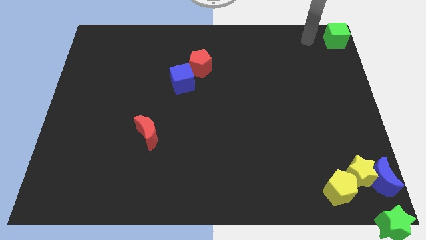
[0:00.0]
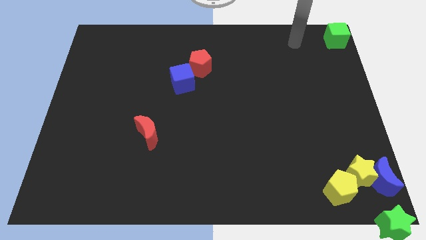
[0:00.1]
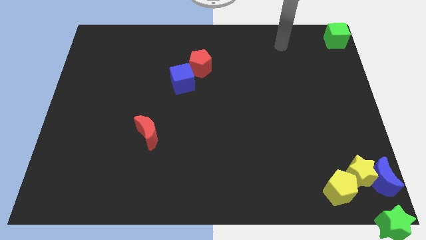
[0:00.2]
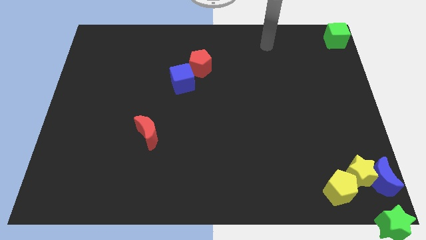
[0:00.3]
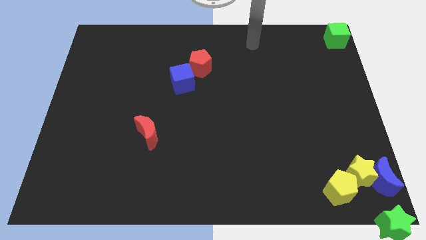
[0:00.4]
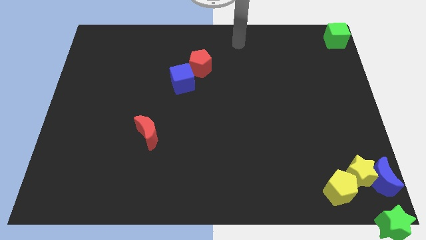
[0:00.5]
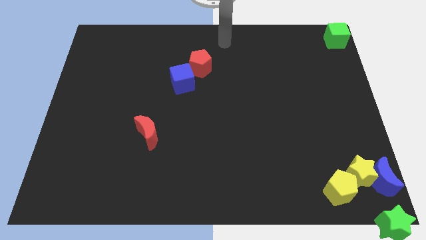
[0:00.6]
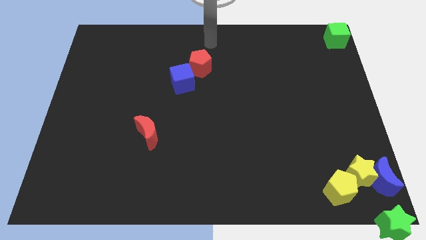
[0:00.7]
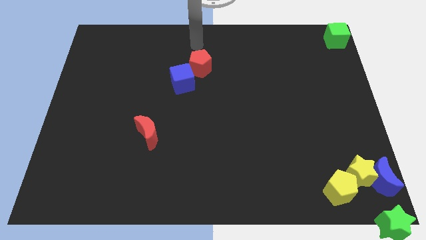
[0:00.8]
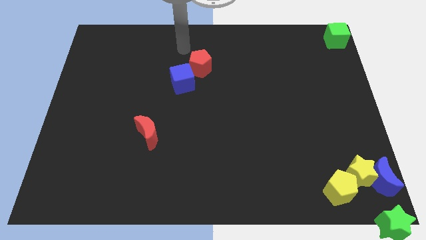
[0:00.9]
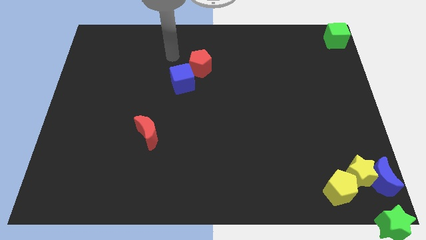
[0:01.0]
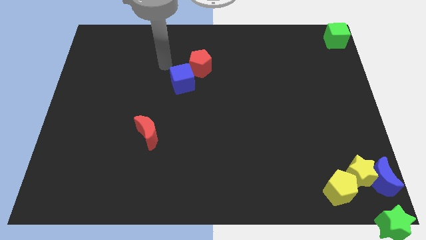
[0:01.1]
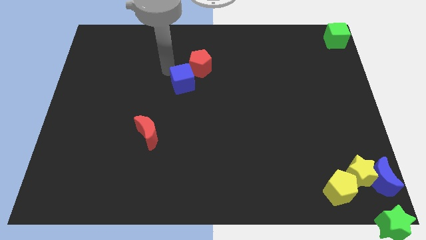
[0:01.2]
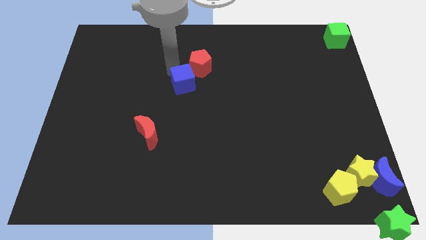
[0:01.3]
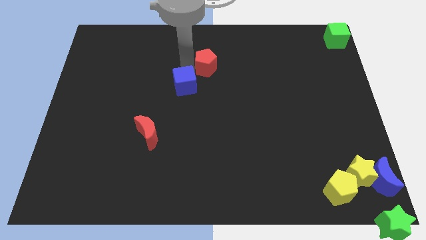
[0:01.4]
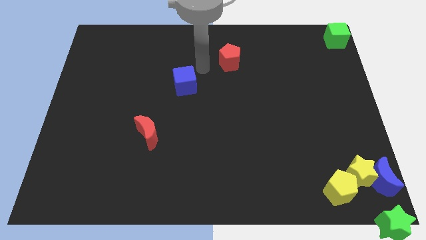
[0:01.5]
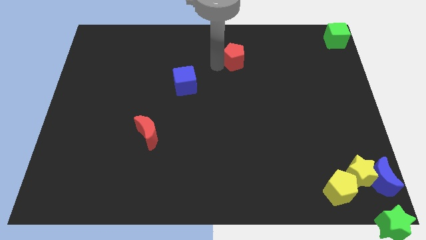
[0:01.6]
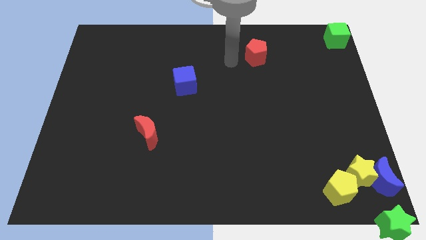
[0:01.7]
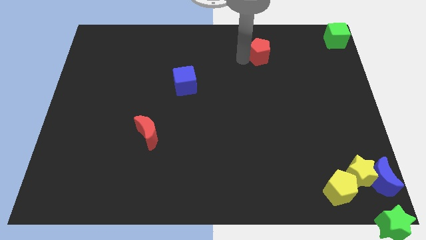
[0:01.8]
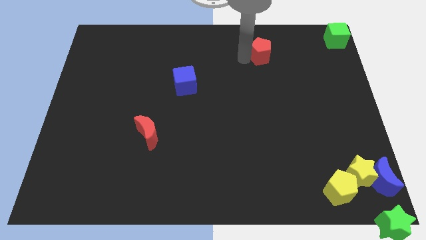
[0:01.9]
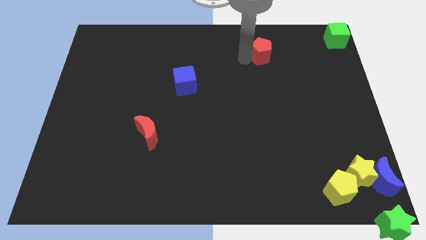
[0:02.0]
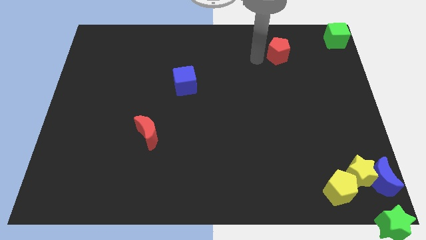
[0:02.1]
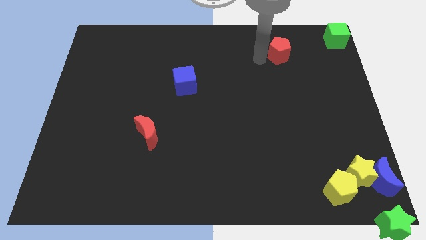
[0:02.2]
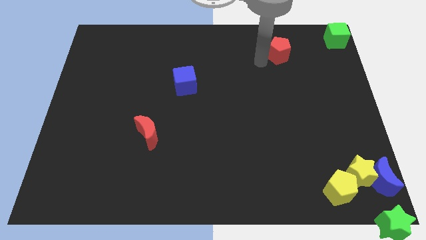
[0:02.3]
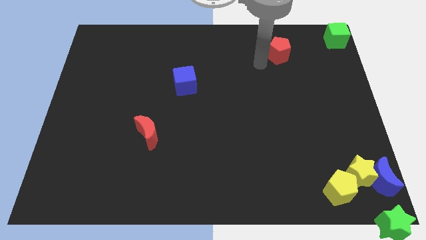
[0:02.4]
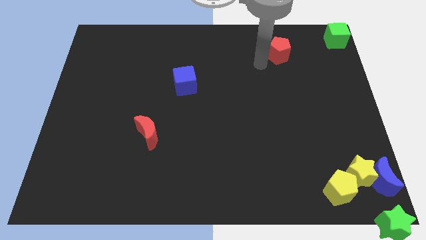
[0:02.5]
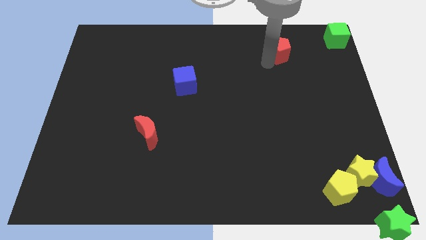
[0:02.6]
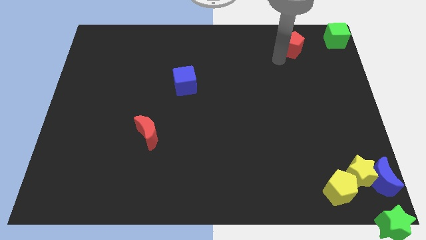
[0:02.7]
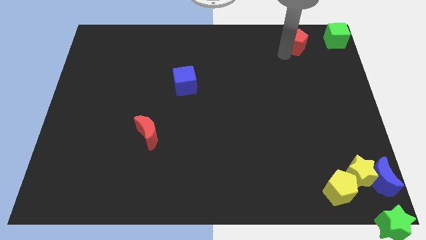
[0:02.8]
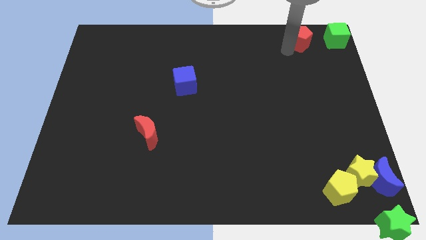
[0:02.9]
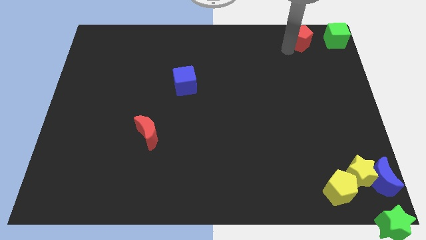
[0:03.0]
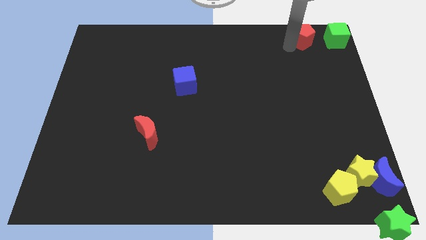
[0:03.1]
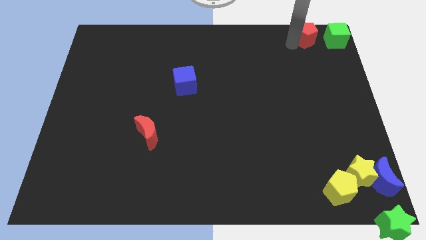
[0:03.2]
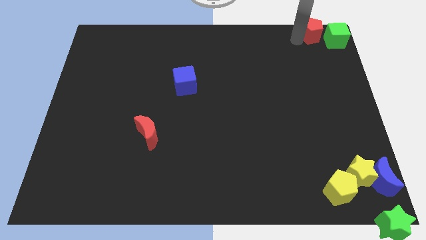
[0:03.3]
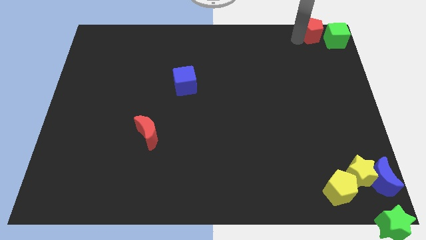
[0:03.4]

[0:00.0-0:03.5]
move the red pentagon to the left side of the green cube

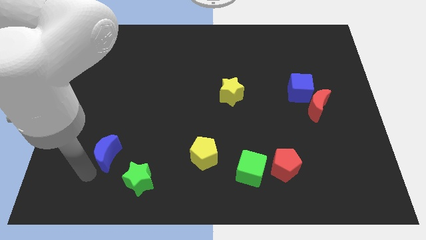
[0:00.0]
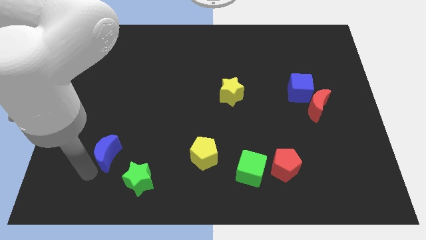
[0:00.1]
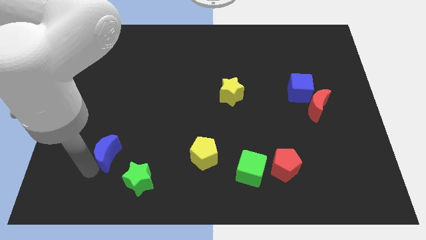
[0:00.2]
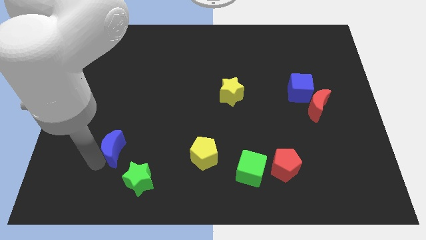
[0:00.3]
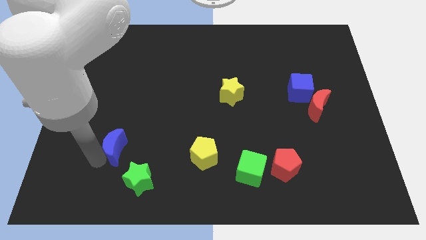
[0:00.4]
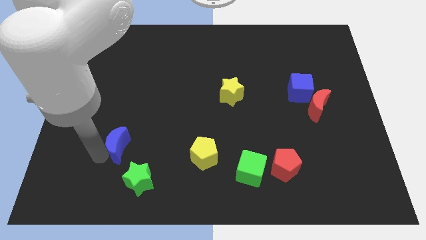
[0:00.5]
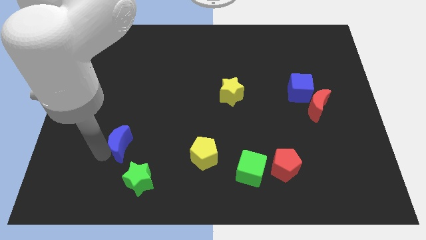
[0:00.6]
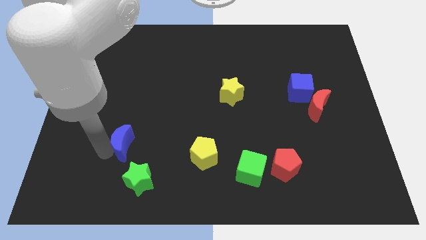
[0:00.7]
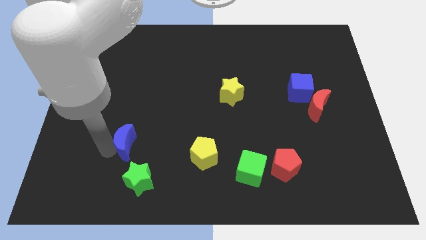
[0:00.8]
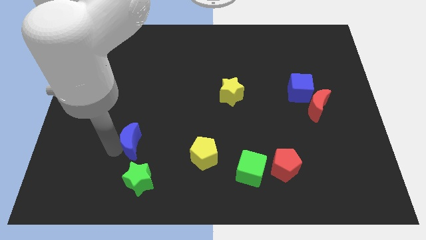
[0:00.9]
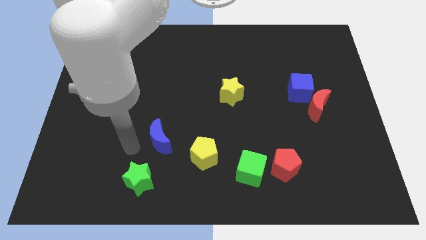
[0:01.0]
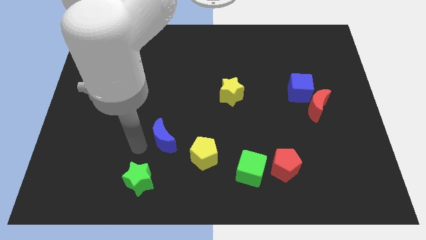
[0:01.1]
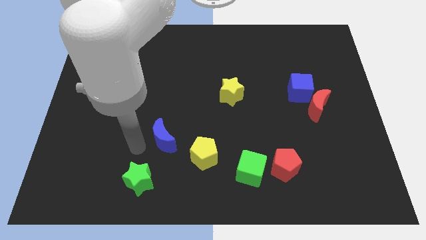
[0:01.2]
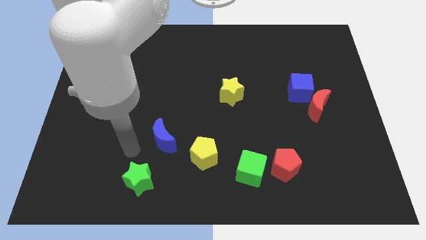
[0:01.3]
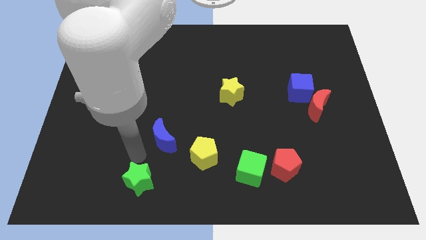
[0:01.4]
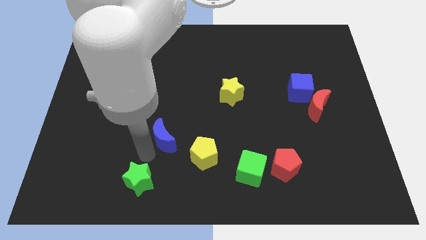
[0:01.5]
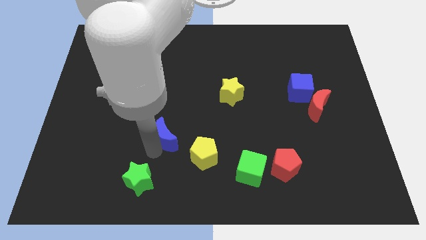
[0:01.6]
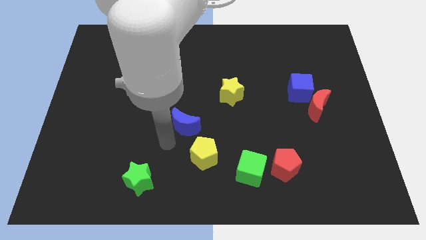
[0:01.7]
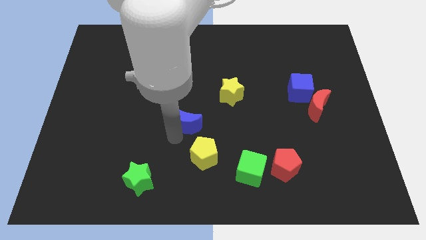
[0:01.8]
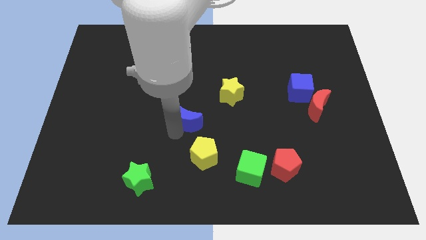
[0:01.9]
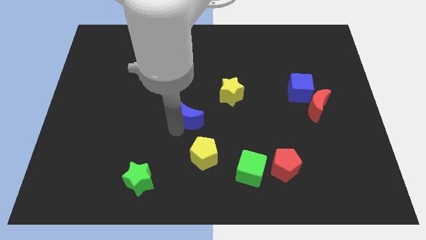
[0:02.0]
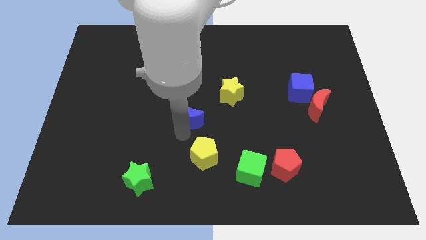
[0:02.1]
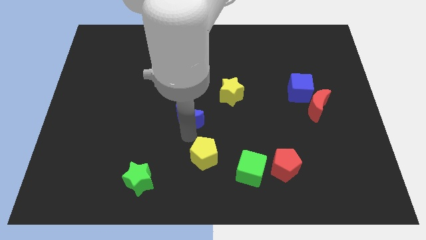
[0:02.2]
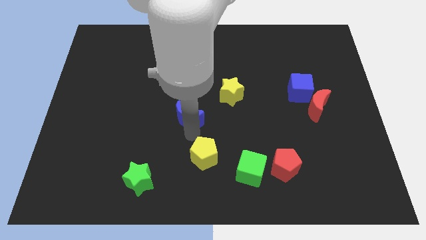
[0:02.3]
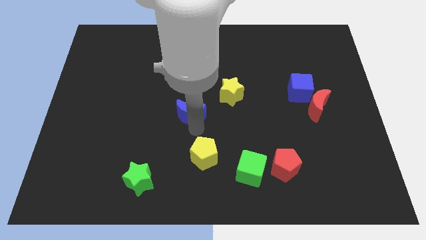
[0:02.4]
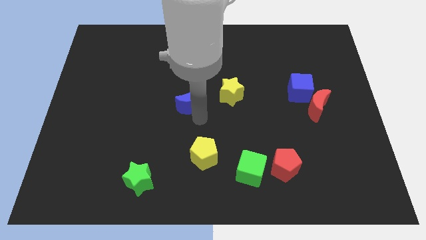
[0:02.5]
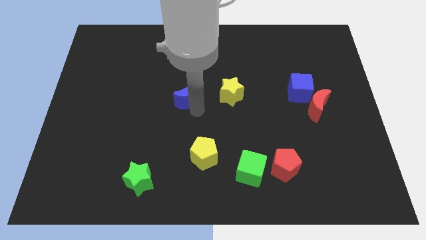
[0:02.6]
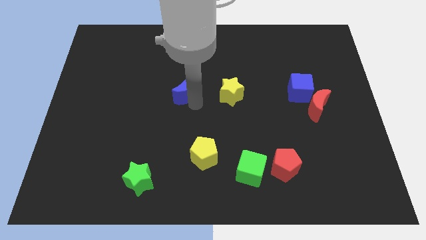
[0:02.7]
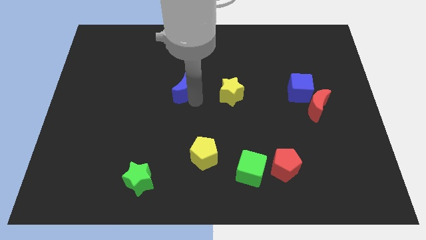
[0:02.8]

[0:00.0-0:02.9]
place the blue moon left to the yellow star

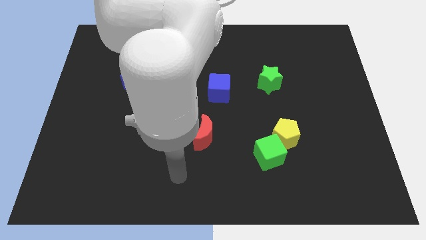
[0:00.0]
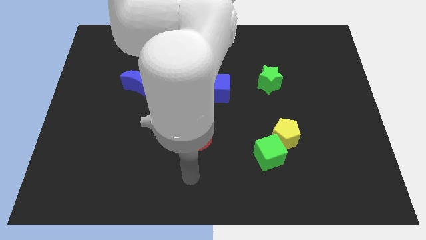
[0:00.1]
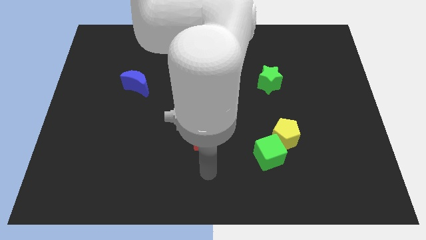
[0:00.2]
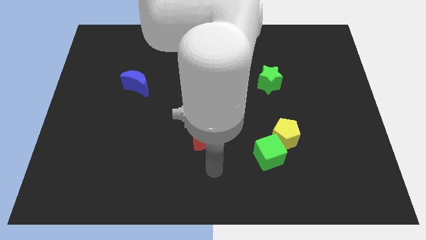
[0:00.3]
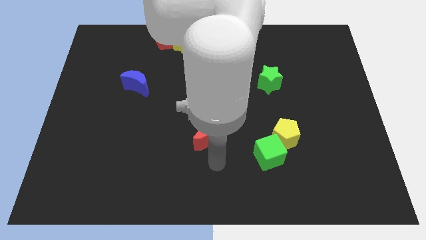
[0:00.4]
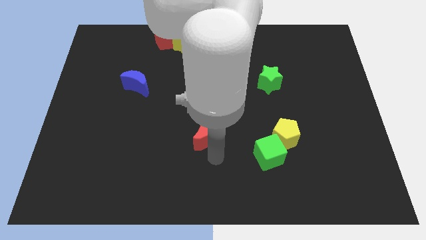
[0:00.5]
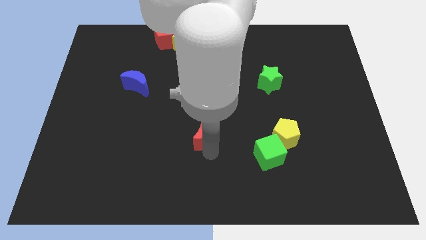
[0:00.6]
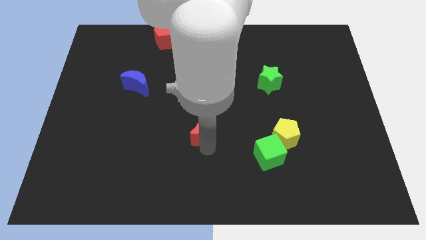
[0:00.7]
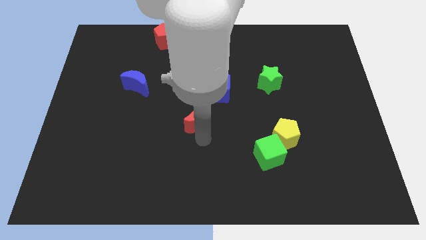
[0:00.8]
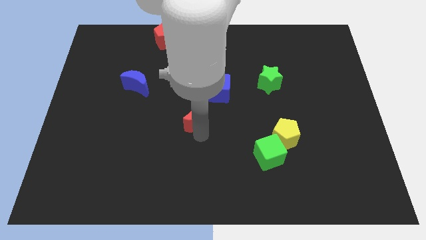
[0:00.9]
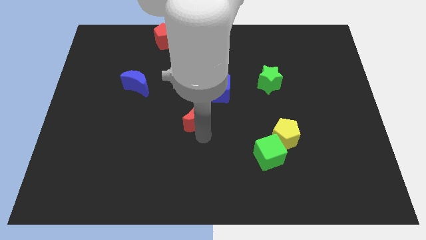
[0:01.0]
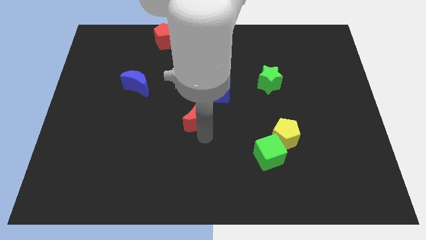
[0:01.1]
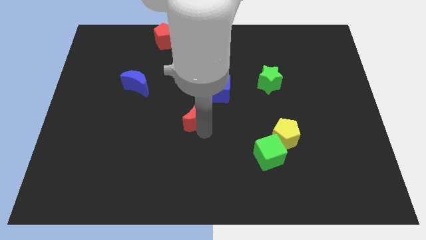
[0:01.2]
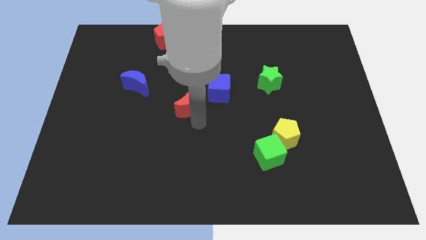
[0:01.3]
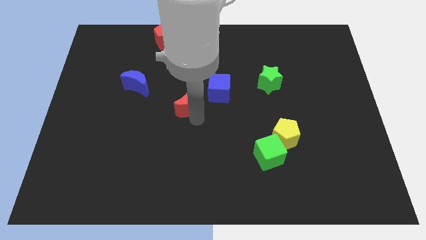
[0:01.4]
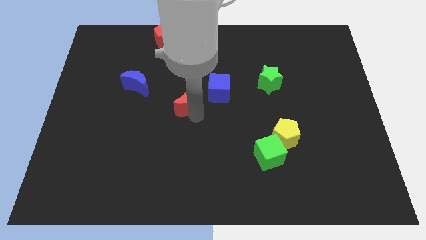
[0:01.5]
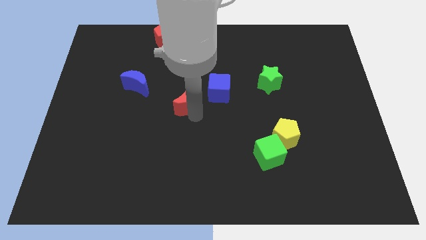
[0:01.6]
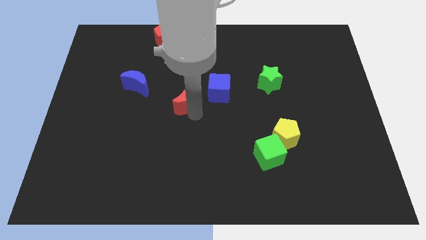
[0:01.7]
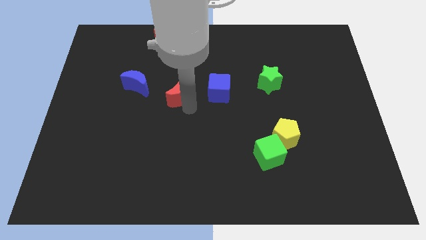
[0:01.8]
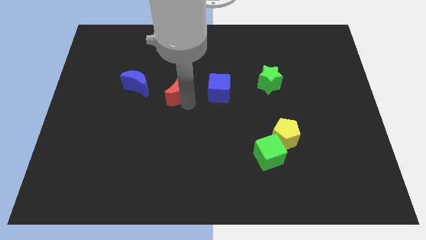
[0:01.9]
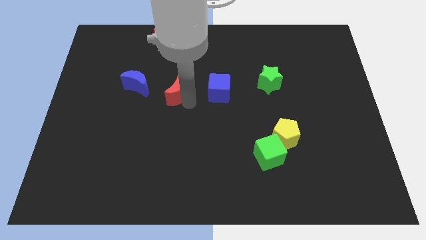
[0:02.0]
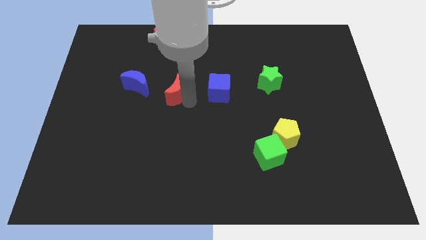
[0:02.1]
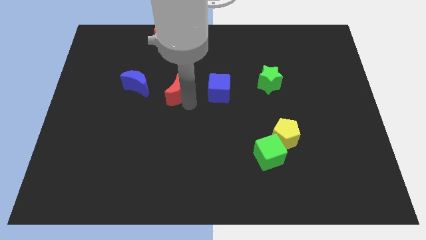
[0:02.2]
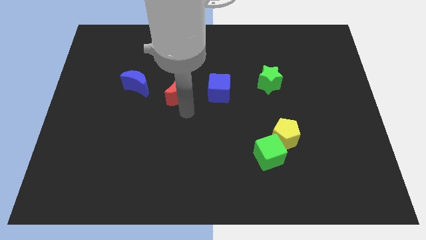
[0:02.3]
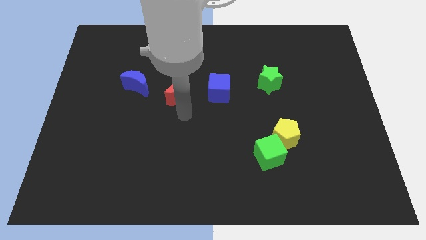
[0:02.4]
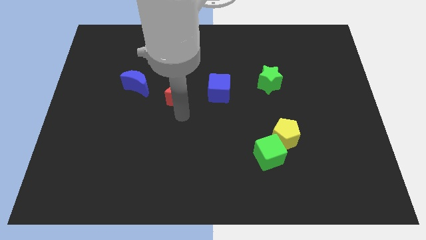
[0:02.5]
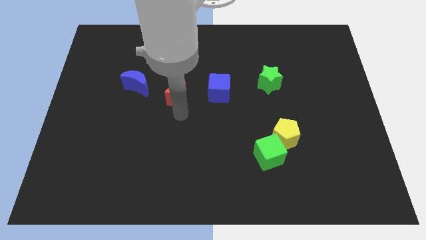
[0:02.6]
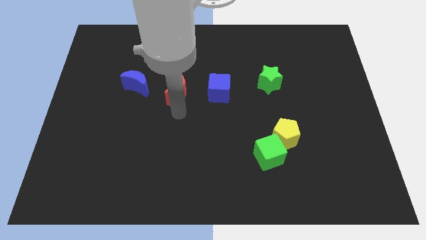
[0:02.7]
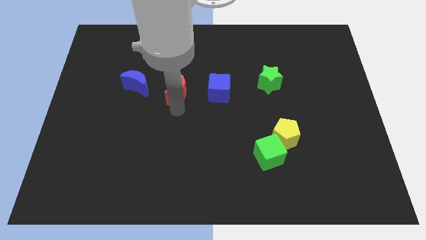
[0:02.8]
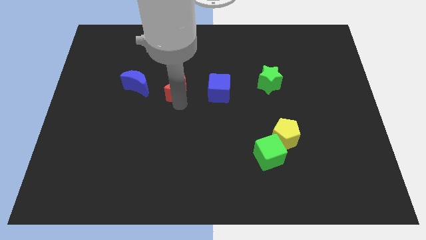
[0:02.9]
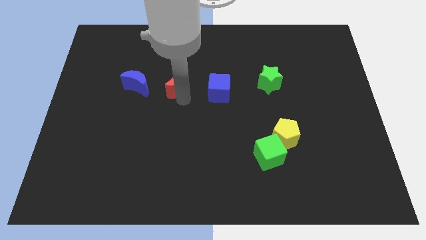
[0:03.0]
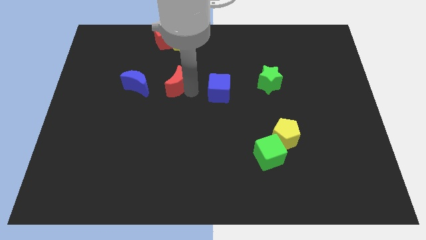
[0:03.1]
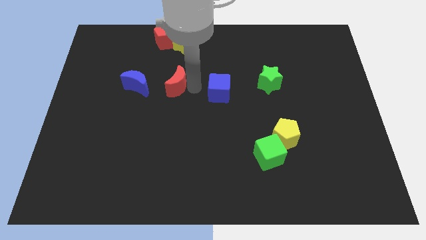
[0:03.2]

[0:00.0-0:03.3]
move the red moon towards the yellow star
